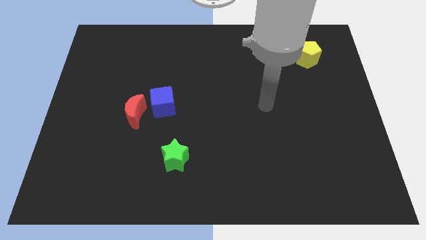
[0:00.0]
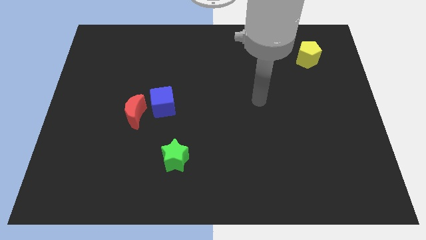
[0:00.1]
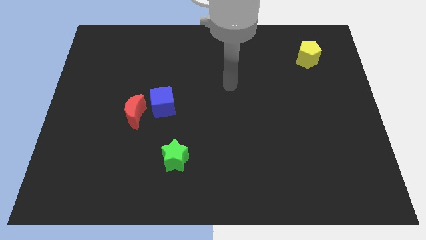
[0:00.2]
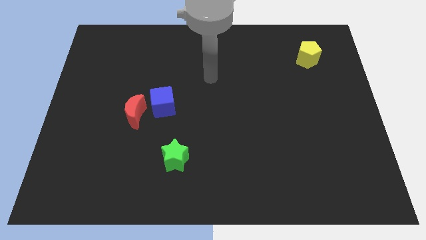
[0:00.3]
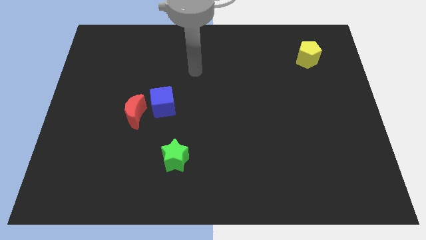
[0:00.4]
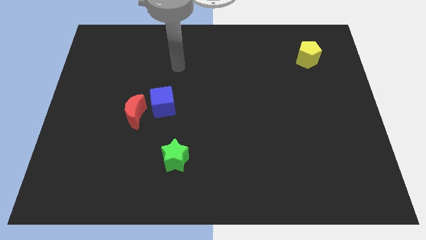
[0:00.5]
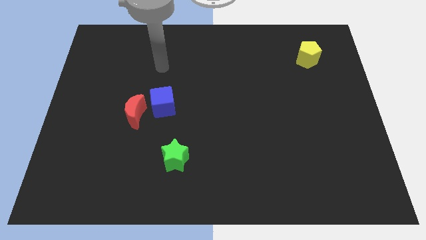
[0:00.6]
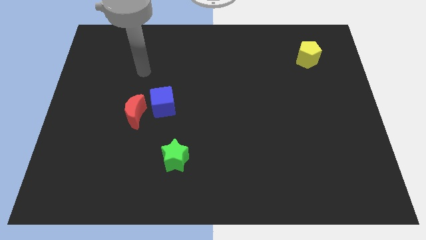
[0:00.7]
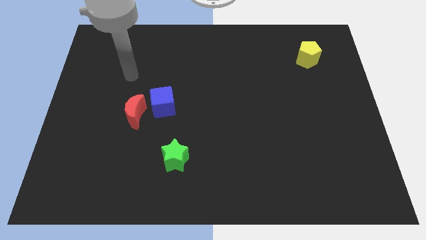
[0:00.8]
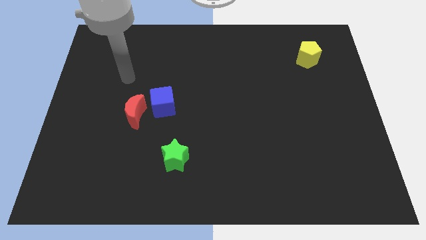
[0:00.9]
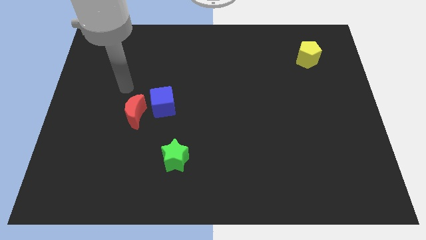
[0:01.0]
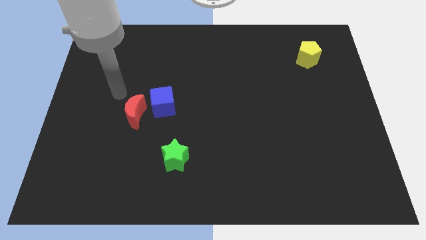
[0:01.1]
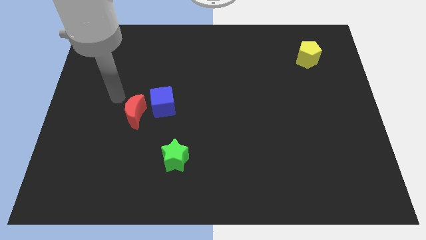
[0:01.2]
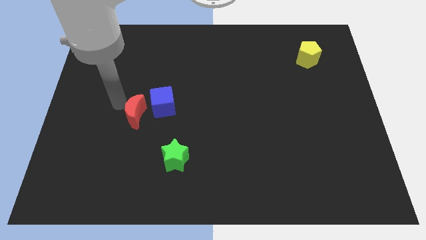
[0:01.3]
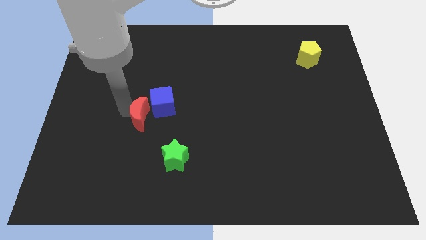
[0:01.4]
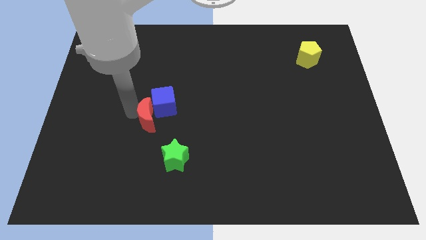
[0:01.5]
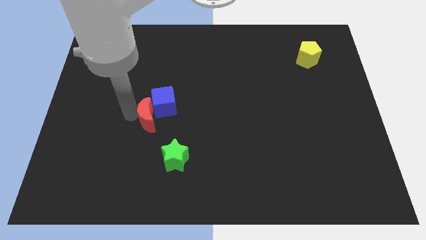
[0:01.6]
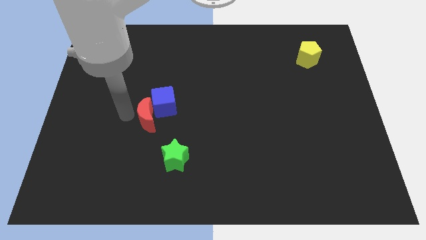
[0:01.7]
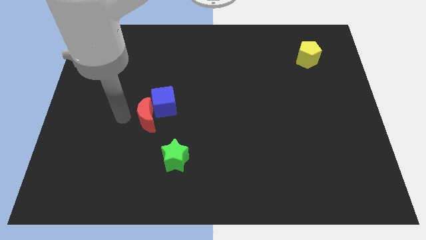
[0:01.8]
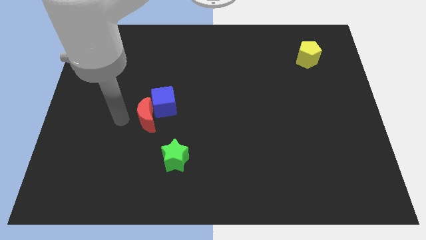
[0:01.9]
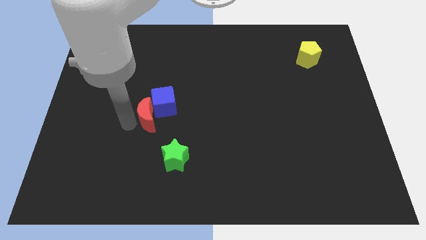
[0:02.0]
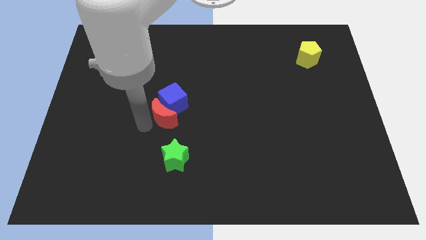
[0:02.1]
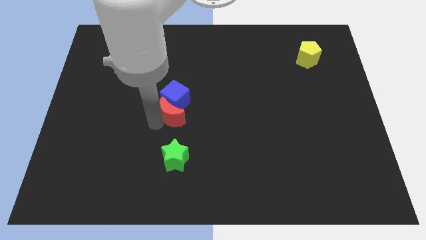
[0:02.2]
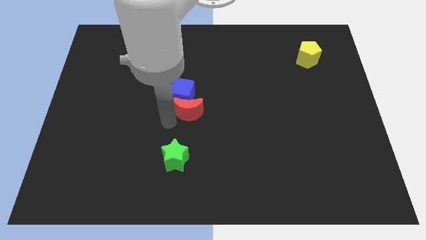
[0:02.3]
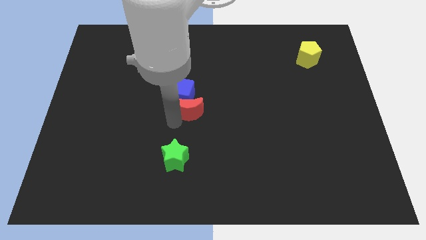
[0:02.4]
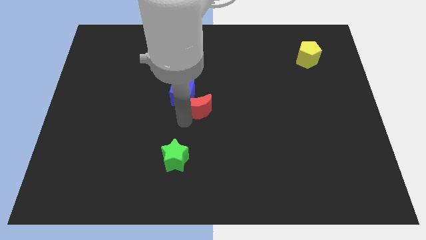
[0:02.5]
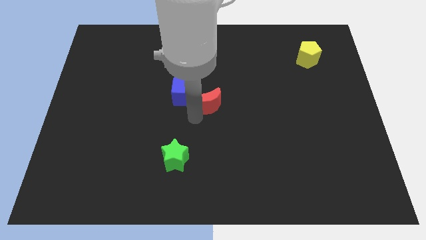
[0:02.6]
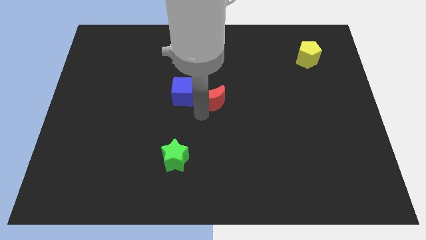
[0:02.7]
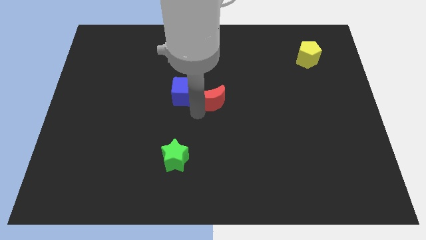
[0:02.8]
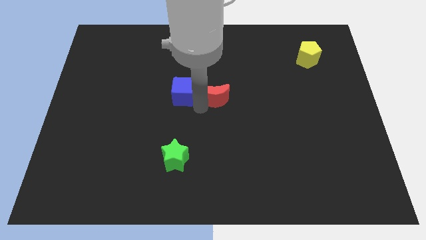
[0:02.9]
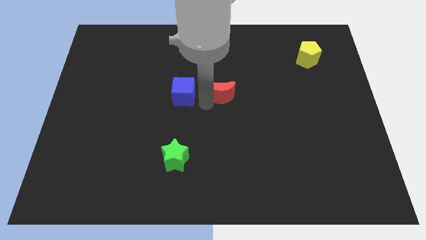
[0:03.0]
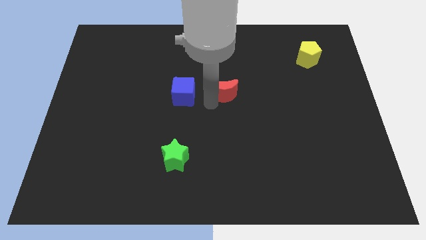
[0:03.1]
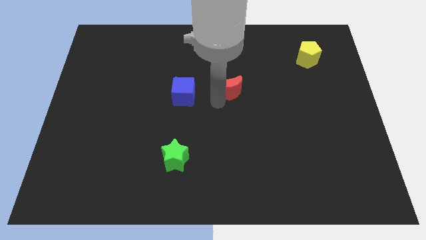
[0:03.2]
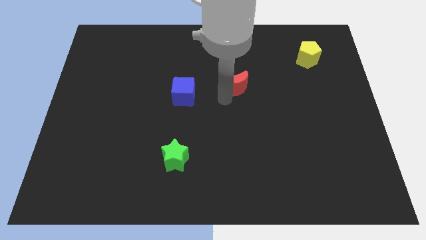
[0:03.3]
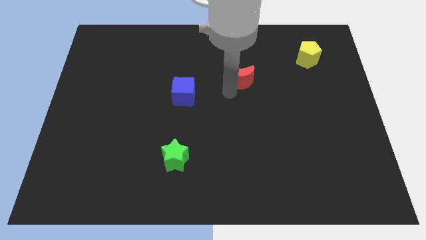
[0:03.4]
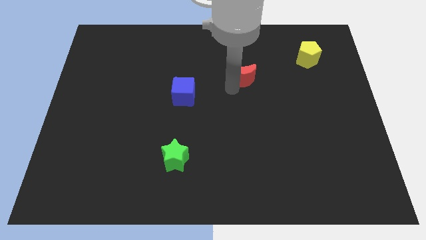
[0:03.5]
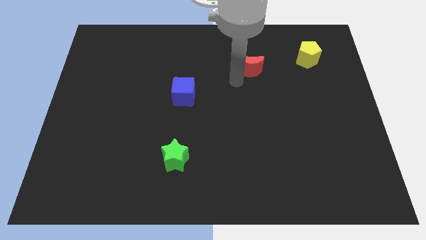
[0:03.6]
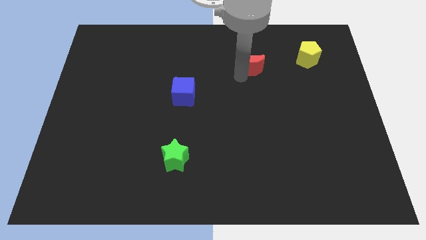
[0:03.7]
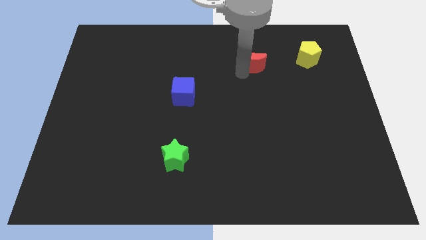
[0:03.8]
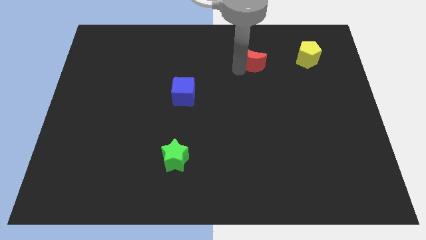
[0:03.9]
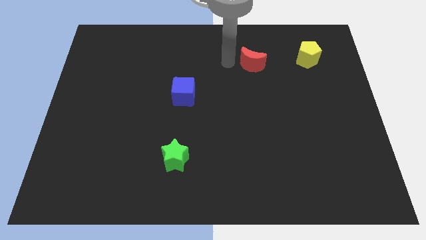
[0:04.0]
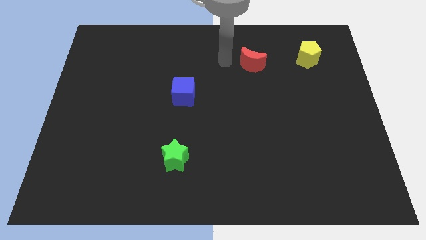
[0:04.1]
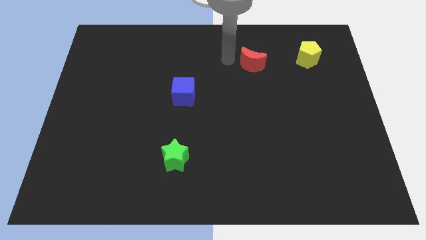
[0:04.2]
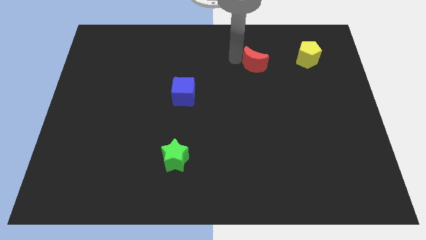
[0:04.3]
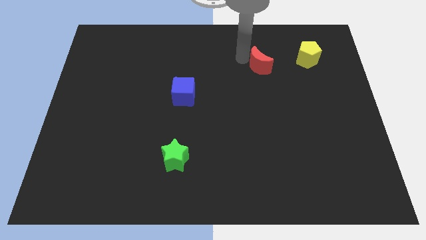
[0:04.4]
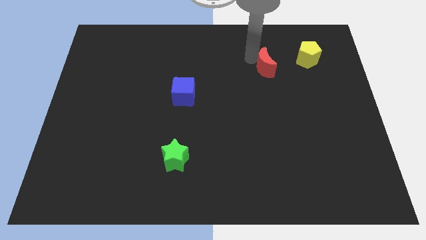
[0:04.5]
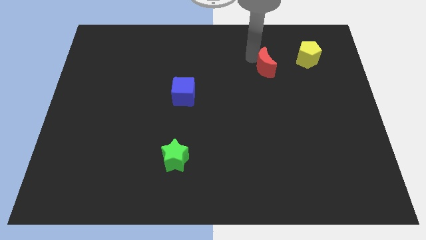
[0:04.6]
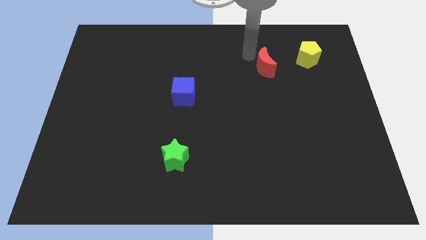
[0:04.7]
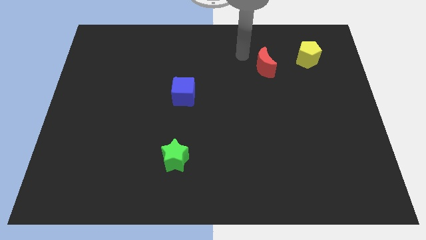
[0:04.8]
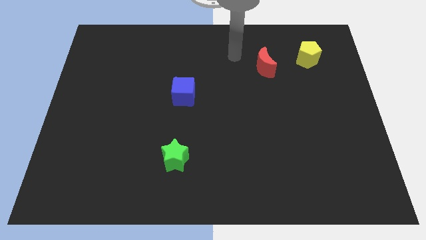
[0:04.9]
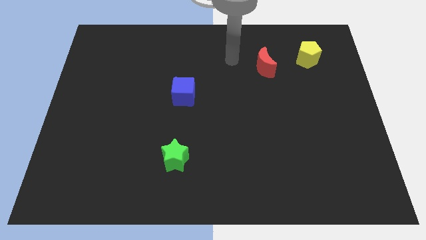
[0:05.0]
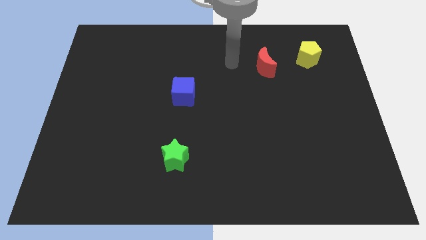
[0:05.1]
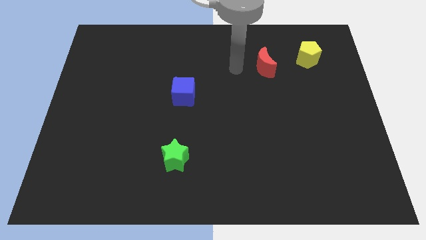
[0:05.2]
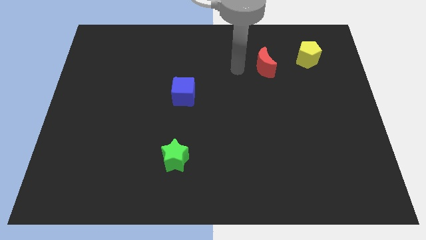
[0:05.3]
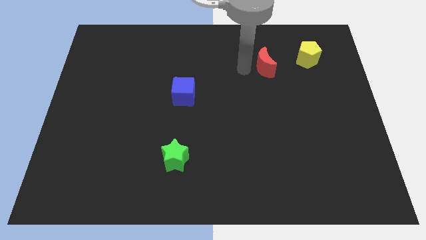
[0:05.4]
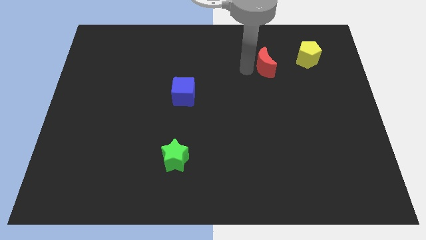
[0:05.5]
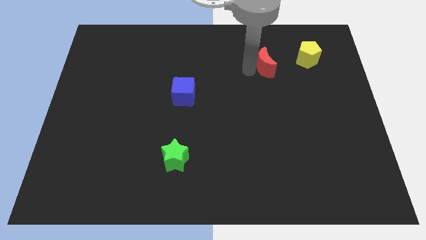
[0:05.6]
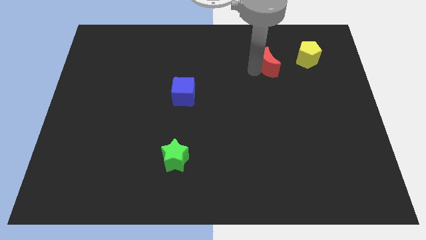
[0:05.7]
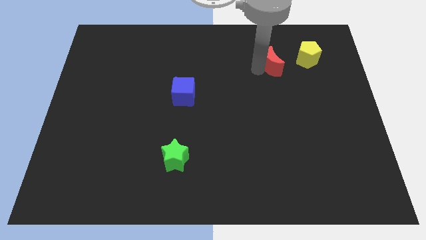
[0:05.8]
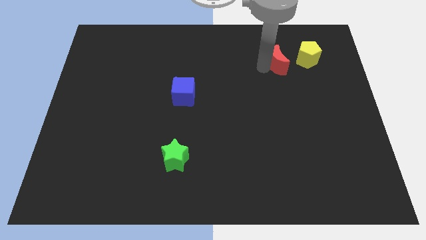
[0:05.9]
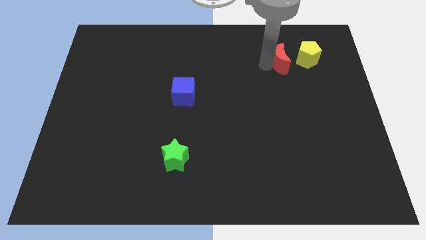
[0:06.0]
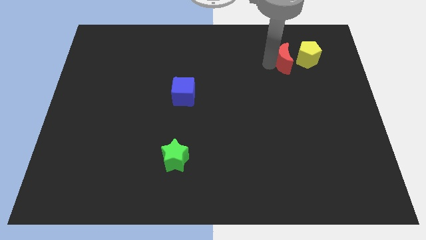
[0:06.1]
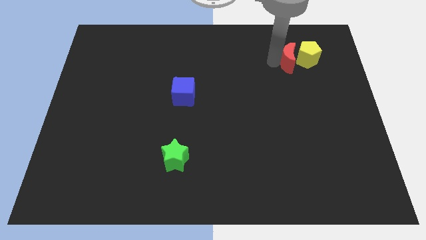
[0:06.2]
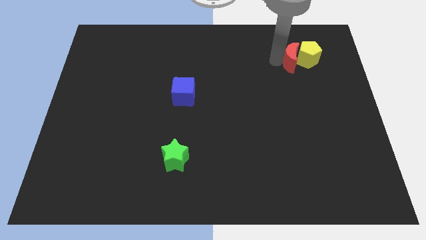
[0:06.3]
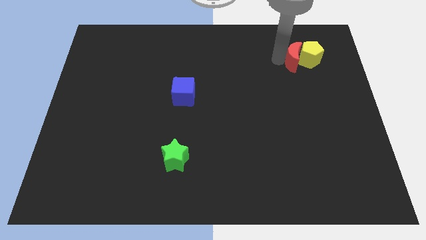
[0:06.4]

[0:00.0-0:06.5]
move the moon next to the pentagon

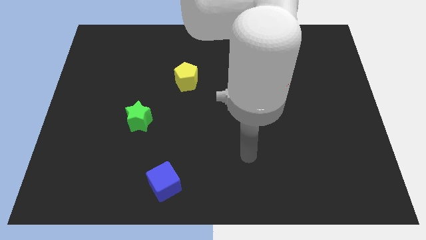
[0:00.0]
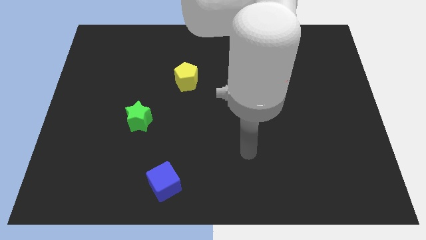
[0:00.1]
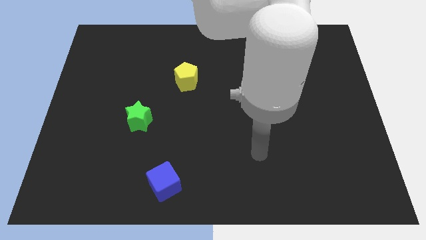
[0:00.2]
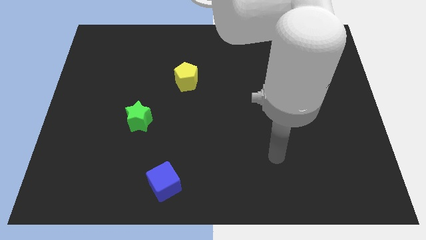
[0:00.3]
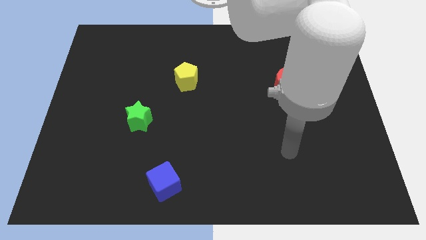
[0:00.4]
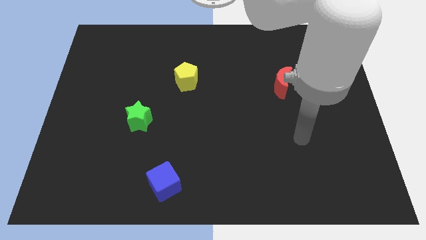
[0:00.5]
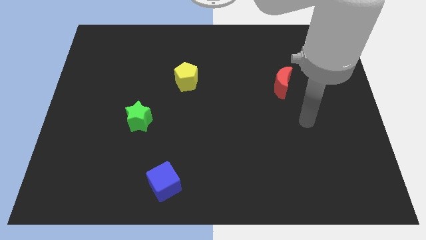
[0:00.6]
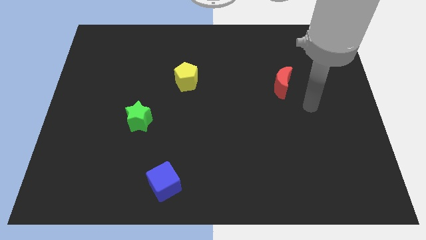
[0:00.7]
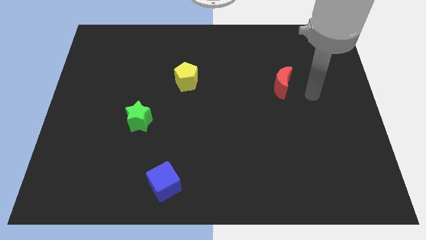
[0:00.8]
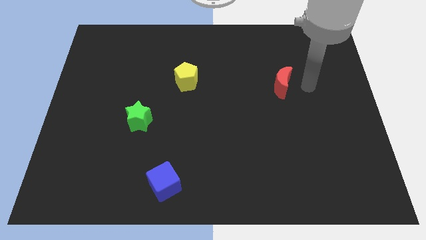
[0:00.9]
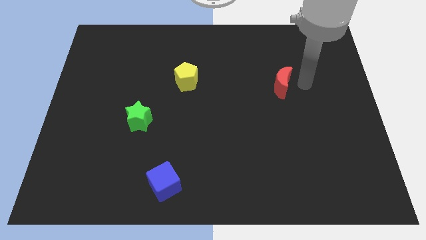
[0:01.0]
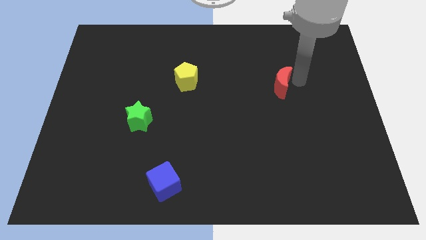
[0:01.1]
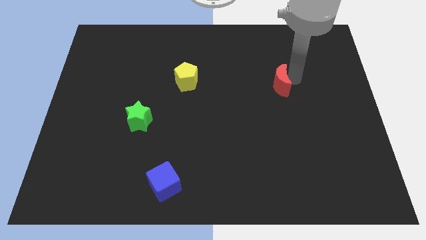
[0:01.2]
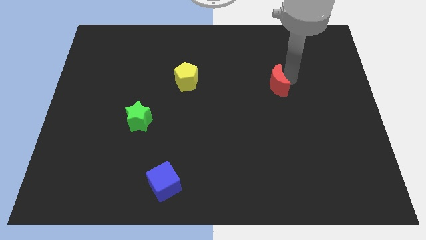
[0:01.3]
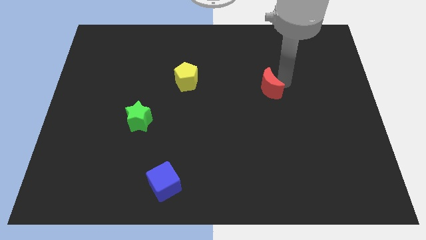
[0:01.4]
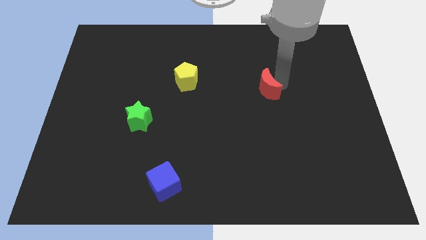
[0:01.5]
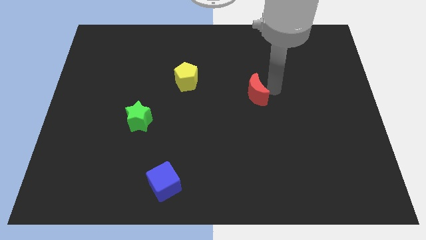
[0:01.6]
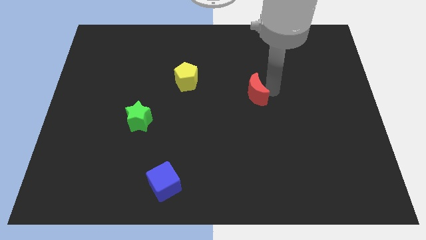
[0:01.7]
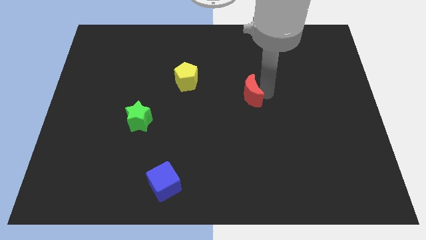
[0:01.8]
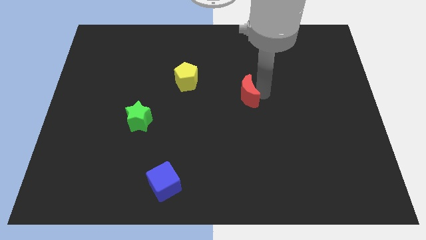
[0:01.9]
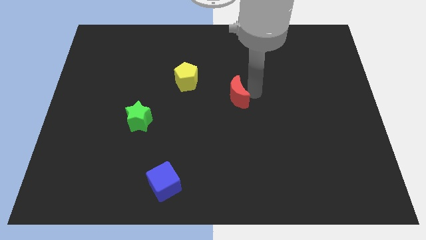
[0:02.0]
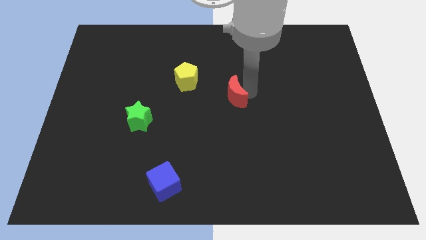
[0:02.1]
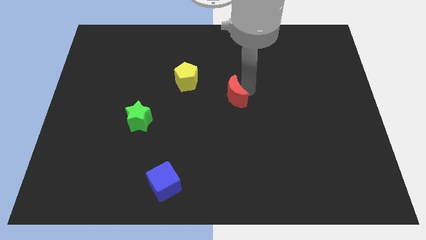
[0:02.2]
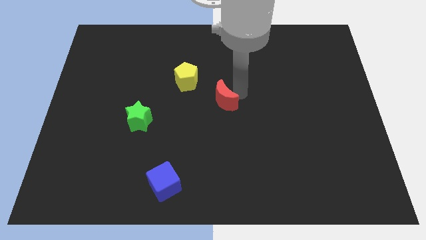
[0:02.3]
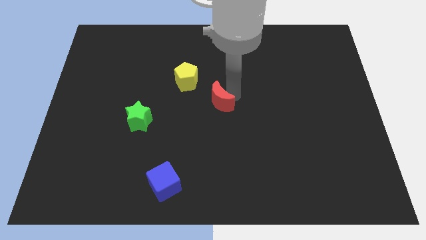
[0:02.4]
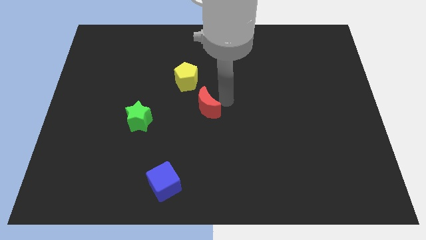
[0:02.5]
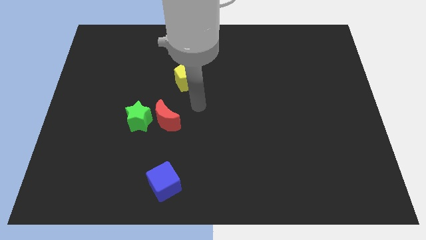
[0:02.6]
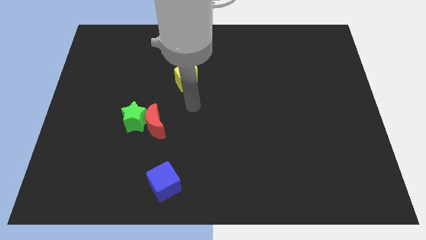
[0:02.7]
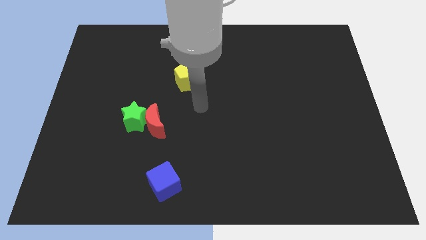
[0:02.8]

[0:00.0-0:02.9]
move the moon to the star
